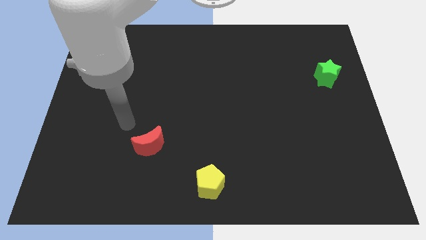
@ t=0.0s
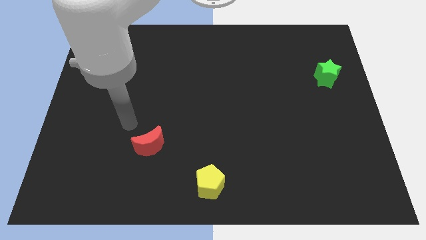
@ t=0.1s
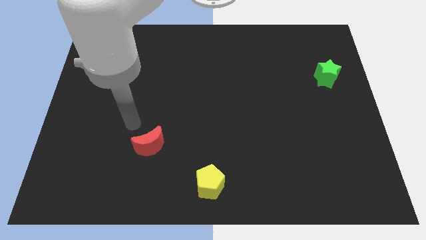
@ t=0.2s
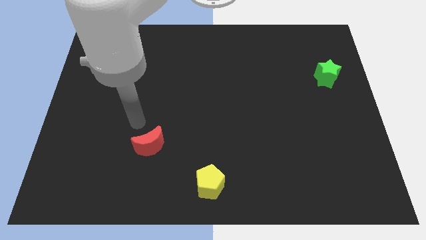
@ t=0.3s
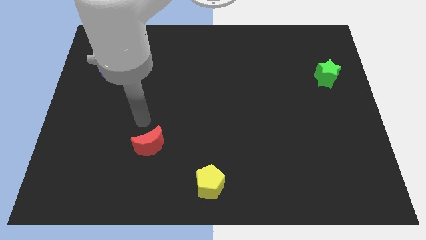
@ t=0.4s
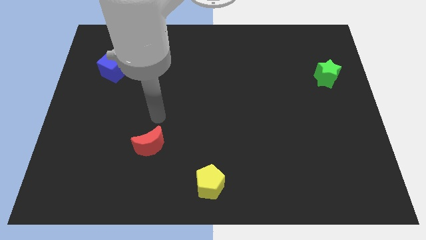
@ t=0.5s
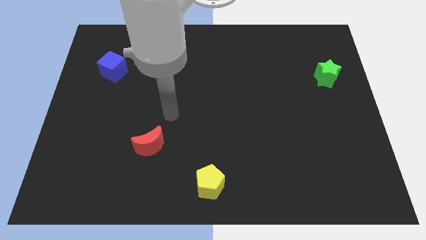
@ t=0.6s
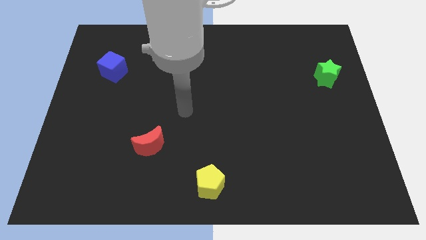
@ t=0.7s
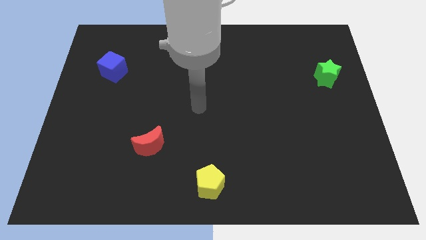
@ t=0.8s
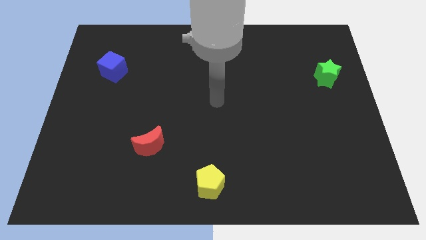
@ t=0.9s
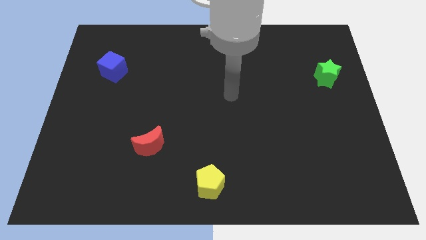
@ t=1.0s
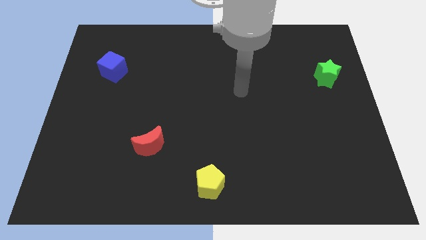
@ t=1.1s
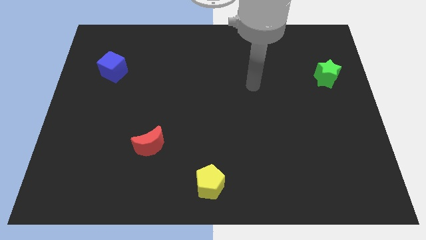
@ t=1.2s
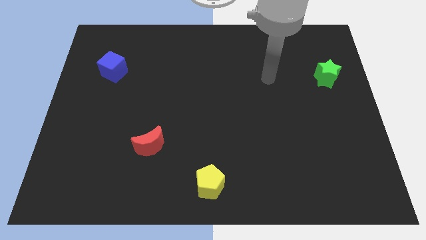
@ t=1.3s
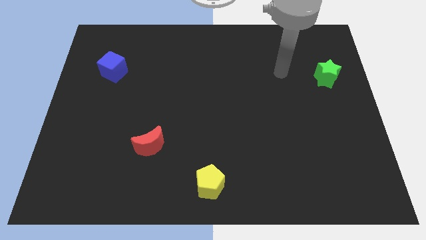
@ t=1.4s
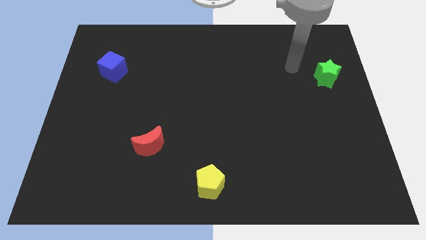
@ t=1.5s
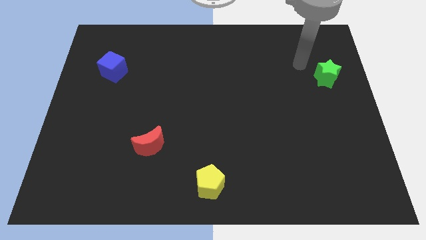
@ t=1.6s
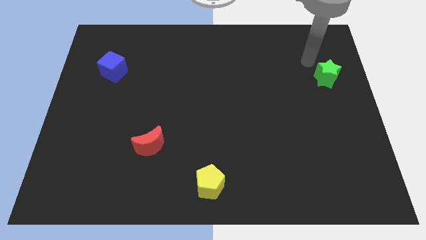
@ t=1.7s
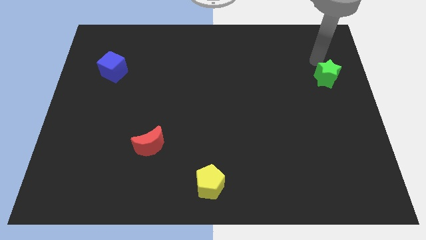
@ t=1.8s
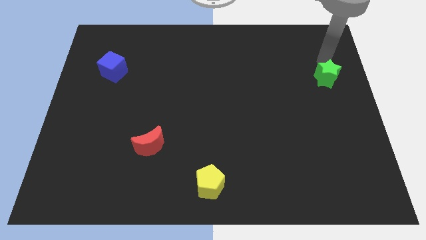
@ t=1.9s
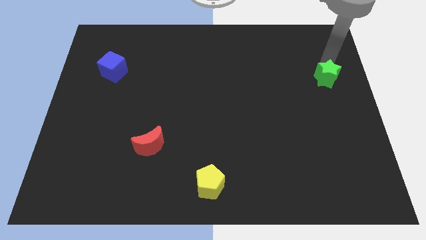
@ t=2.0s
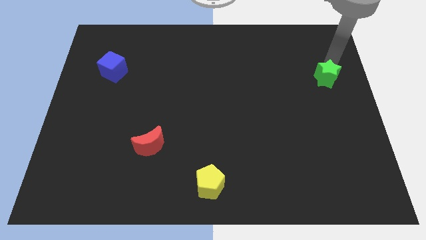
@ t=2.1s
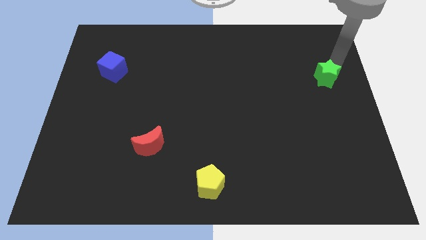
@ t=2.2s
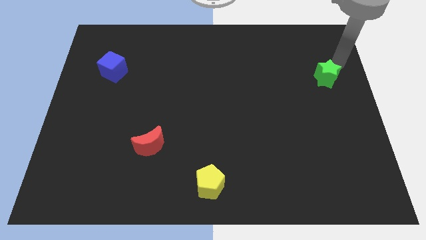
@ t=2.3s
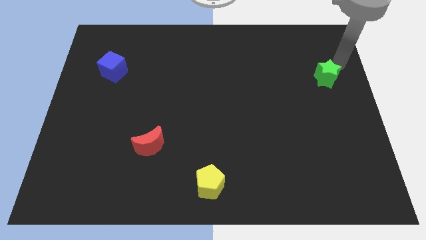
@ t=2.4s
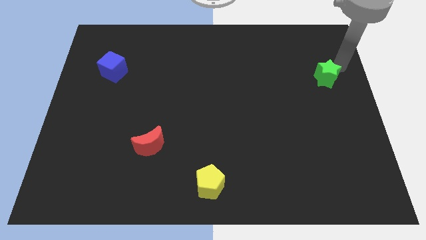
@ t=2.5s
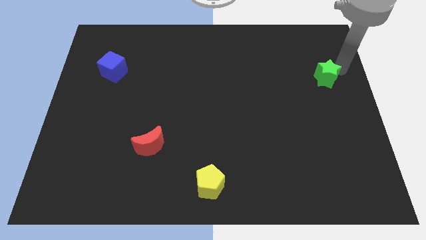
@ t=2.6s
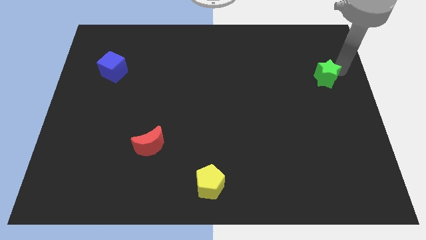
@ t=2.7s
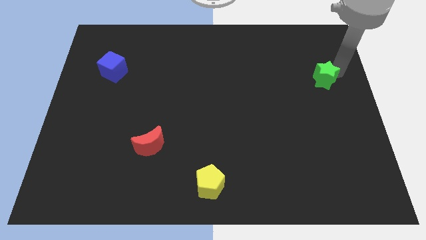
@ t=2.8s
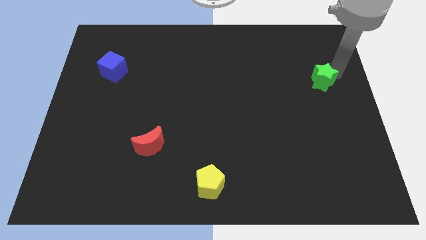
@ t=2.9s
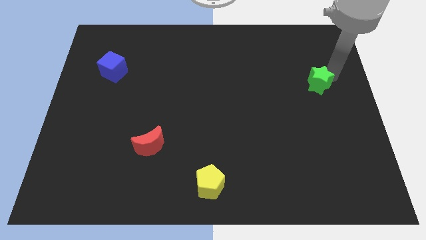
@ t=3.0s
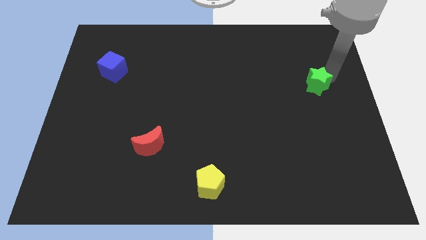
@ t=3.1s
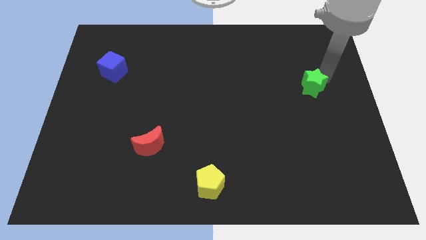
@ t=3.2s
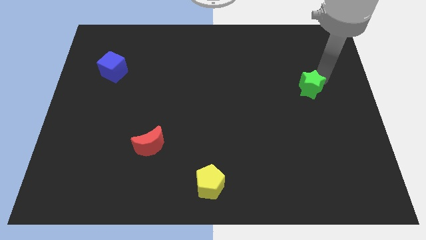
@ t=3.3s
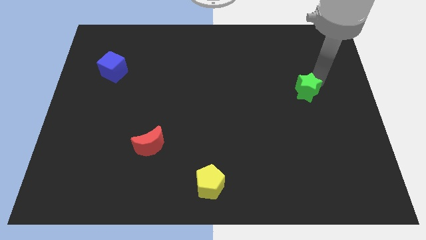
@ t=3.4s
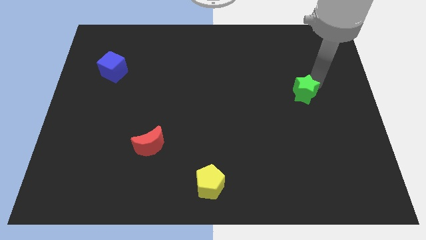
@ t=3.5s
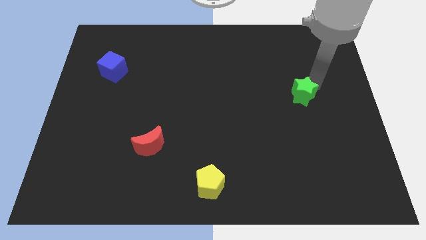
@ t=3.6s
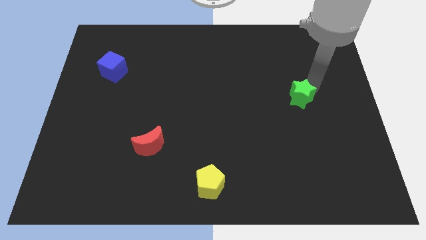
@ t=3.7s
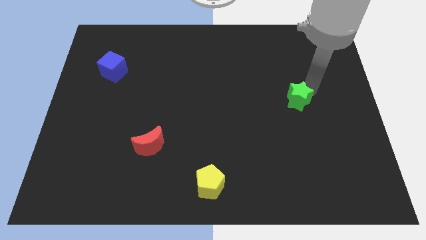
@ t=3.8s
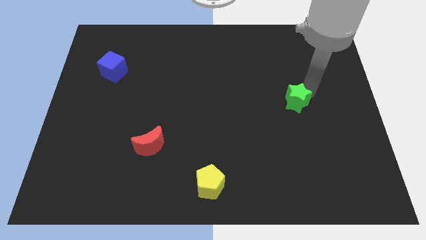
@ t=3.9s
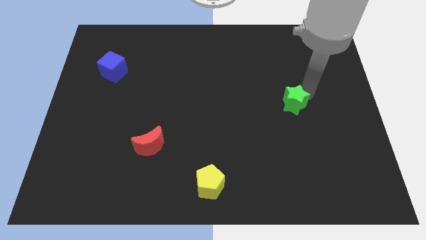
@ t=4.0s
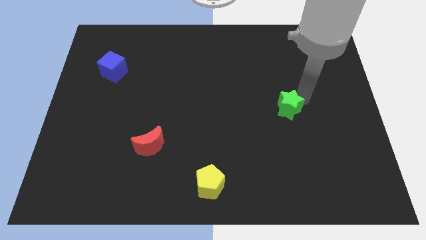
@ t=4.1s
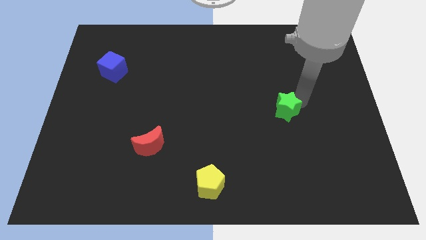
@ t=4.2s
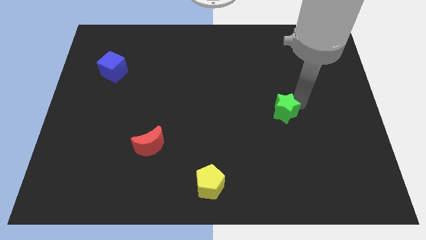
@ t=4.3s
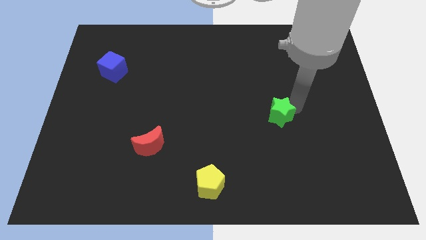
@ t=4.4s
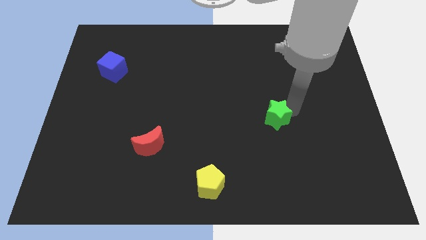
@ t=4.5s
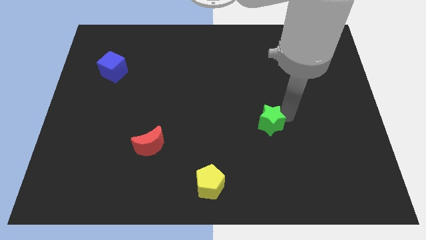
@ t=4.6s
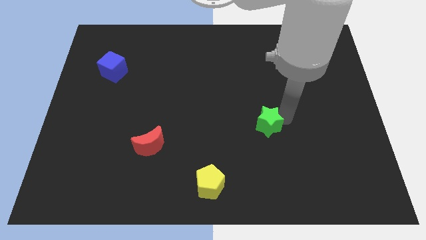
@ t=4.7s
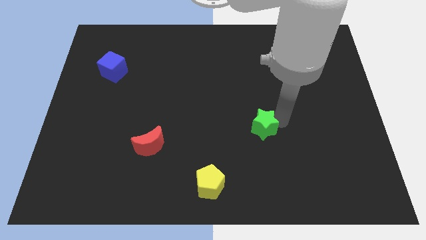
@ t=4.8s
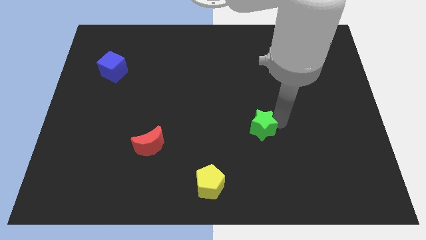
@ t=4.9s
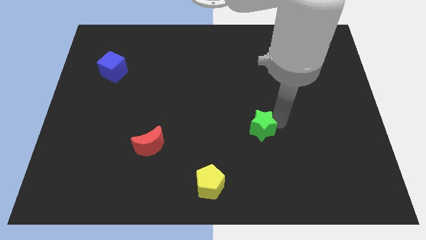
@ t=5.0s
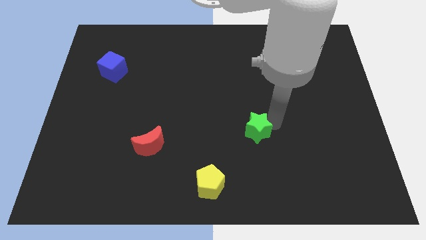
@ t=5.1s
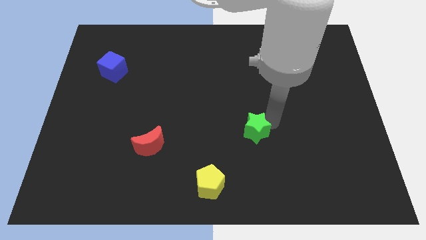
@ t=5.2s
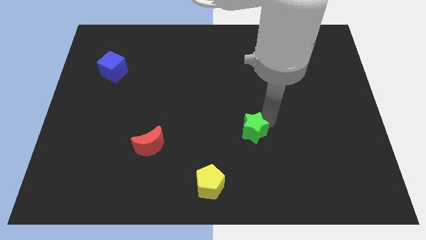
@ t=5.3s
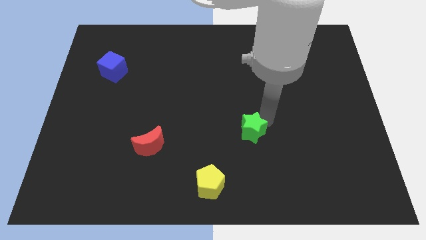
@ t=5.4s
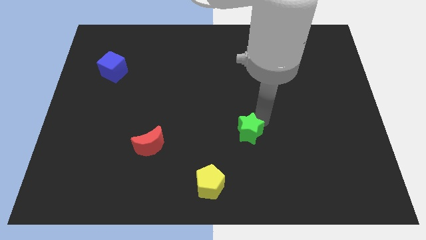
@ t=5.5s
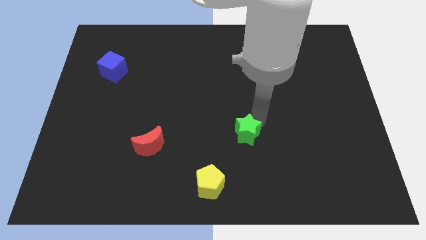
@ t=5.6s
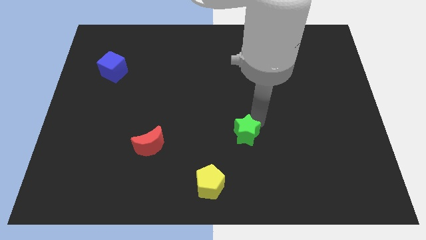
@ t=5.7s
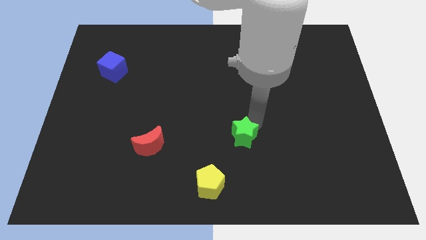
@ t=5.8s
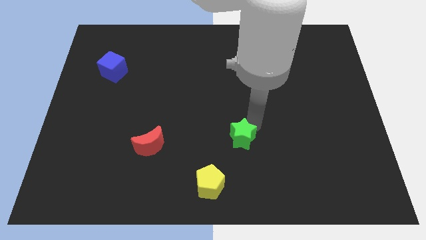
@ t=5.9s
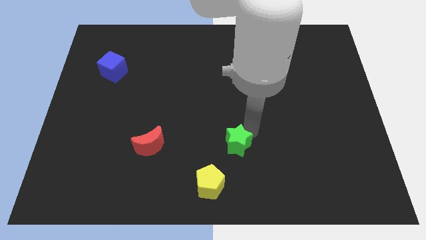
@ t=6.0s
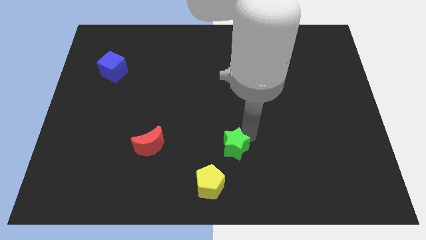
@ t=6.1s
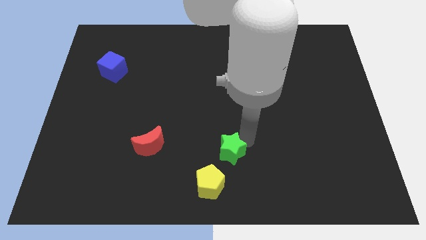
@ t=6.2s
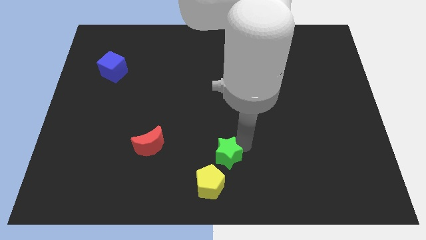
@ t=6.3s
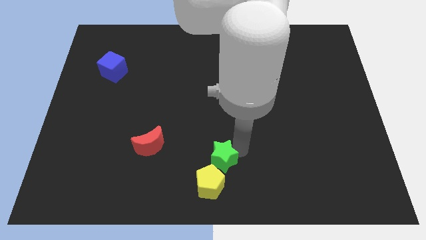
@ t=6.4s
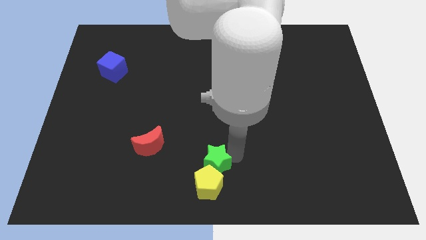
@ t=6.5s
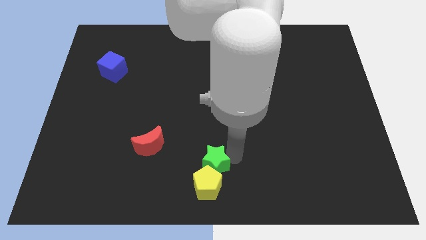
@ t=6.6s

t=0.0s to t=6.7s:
put the star to the pentagon

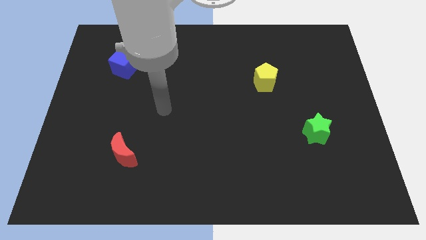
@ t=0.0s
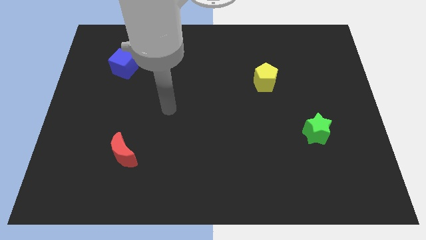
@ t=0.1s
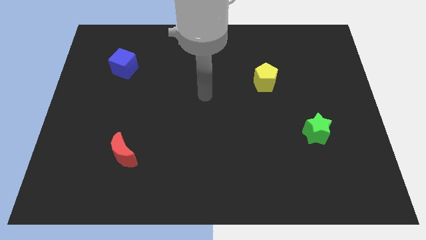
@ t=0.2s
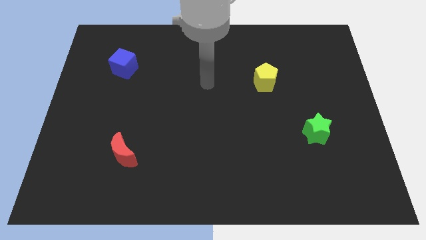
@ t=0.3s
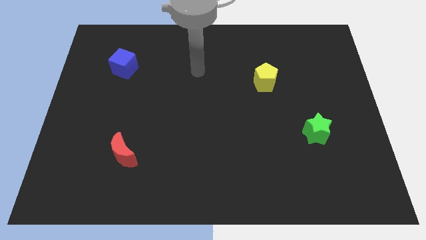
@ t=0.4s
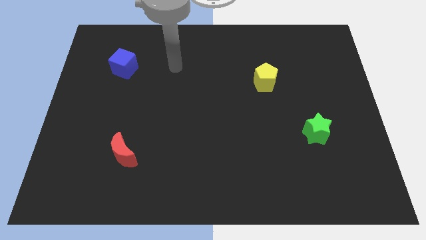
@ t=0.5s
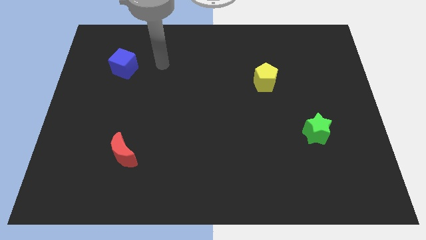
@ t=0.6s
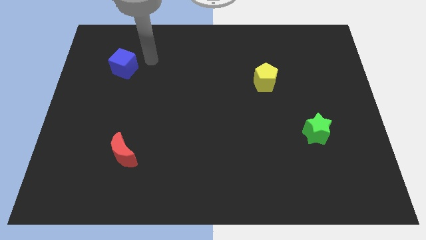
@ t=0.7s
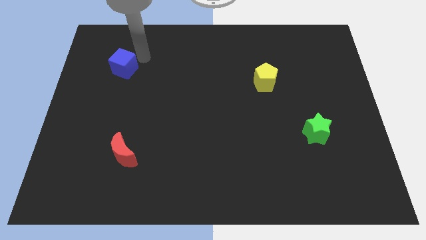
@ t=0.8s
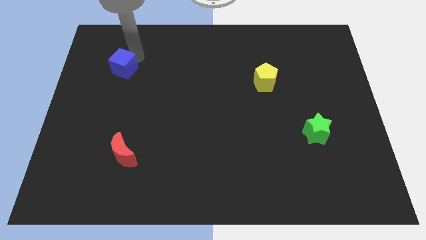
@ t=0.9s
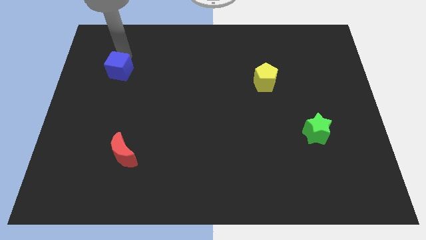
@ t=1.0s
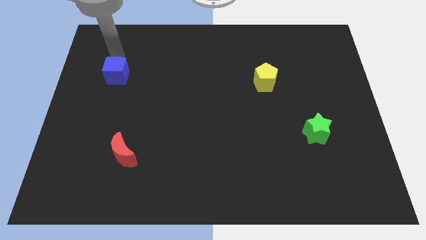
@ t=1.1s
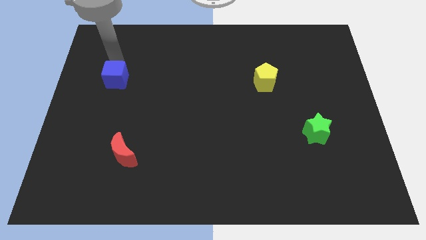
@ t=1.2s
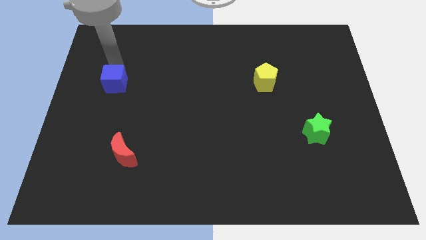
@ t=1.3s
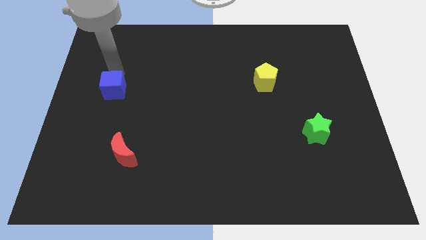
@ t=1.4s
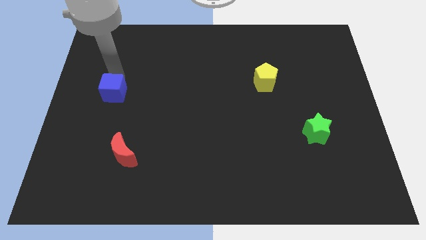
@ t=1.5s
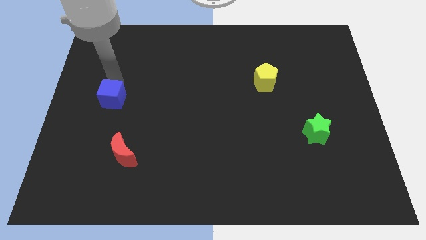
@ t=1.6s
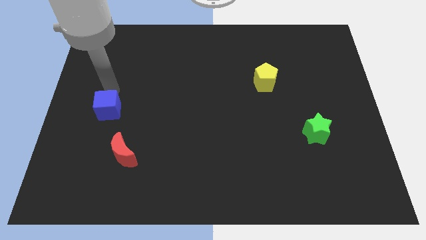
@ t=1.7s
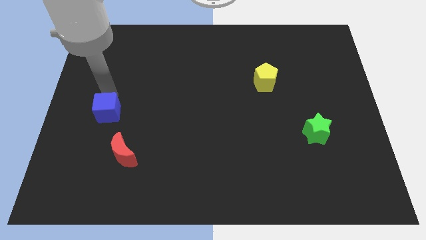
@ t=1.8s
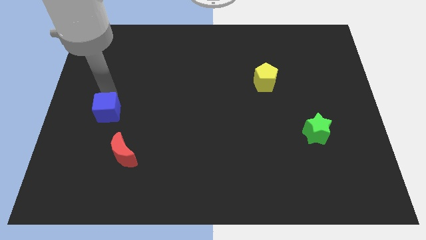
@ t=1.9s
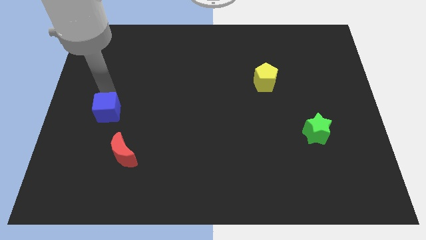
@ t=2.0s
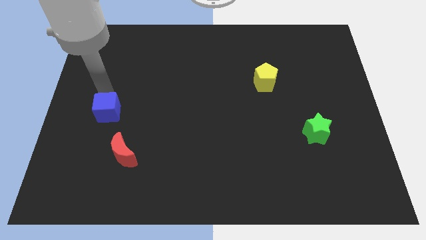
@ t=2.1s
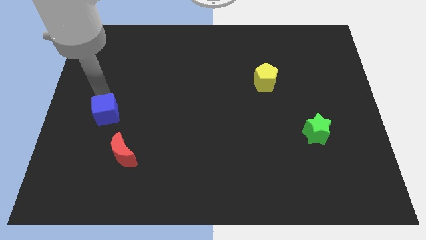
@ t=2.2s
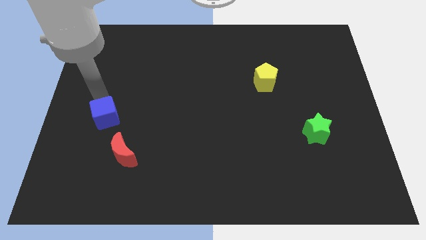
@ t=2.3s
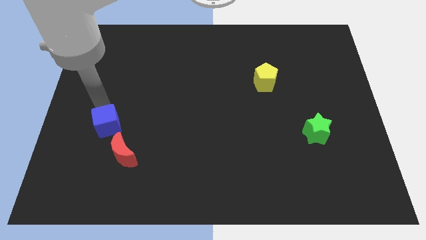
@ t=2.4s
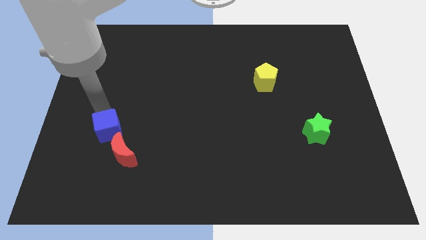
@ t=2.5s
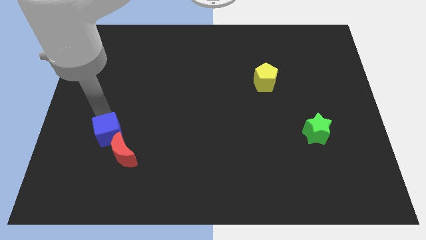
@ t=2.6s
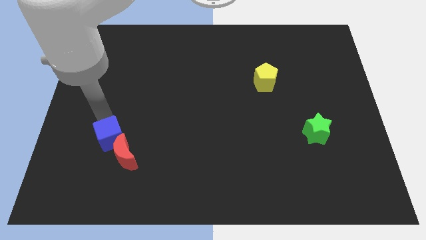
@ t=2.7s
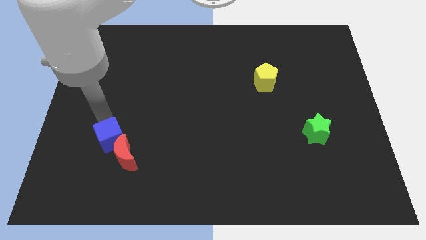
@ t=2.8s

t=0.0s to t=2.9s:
push the blue block towards the moon
